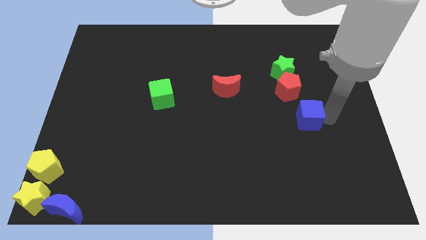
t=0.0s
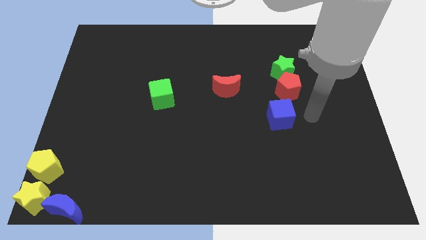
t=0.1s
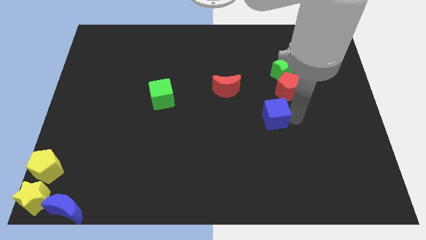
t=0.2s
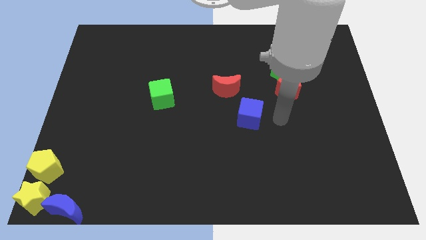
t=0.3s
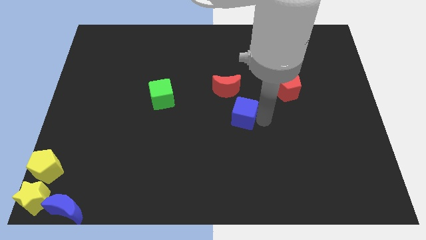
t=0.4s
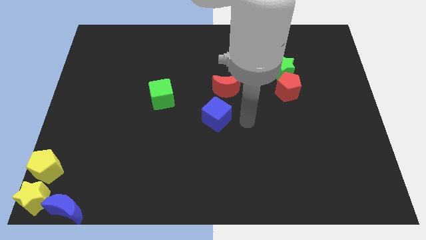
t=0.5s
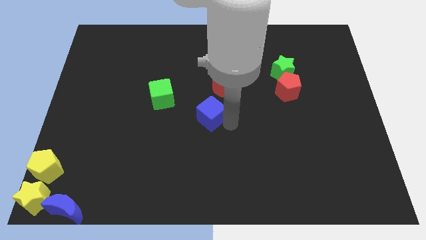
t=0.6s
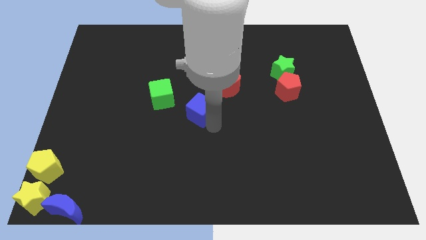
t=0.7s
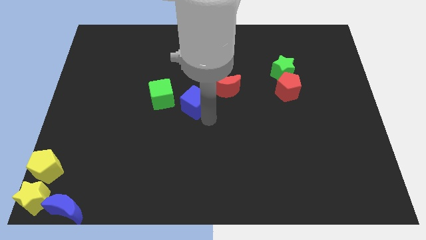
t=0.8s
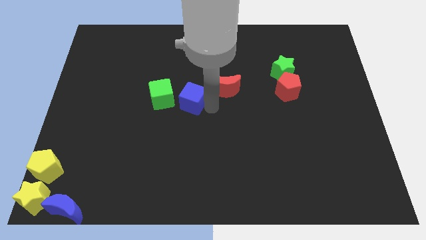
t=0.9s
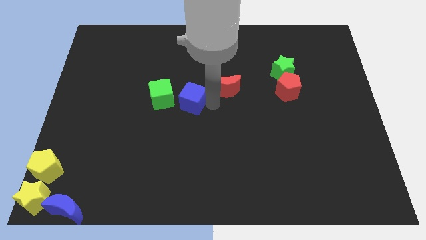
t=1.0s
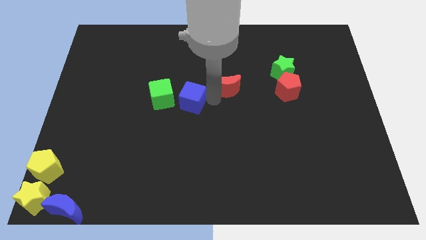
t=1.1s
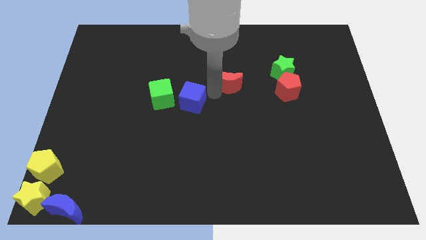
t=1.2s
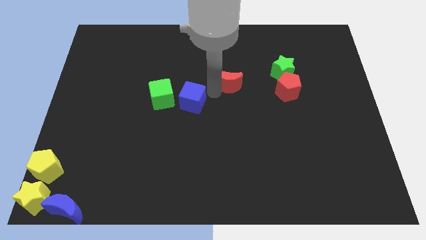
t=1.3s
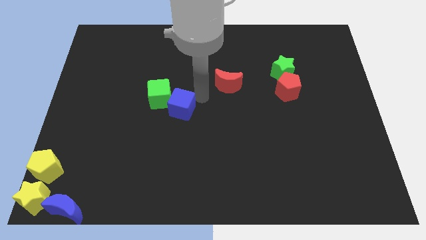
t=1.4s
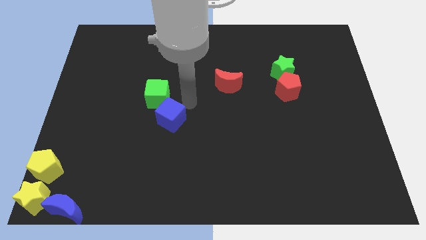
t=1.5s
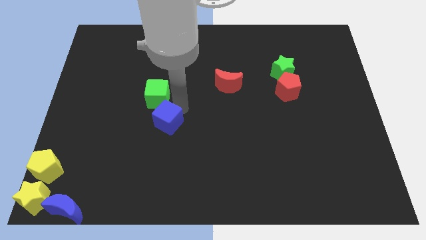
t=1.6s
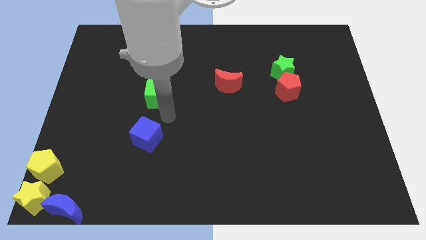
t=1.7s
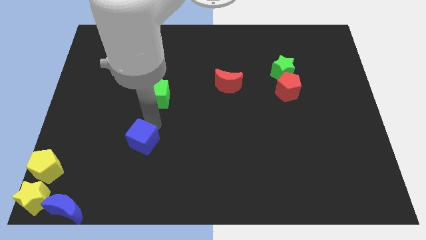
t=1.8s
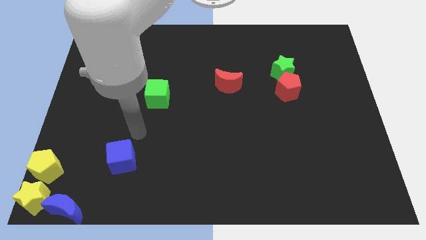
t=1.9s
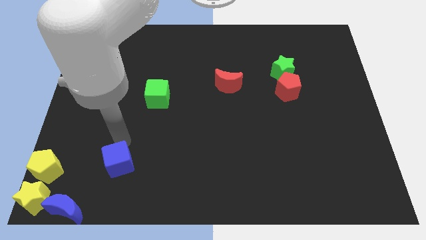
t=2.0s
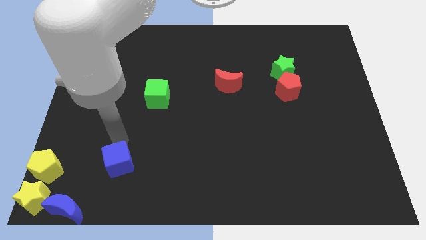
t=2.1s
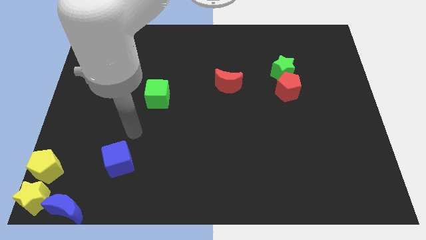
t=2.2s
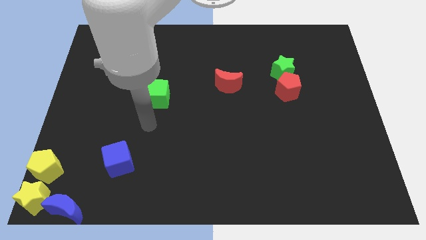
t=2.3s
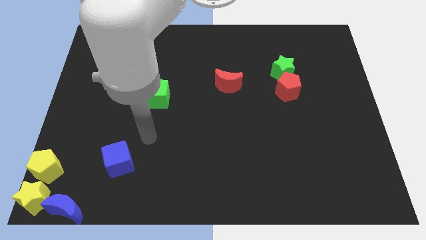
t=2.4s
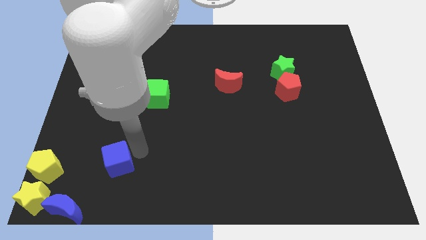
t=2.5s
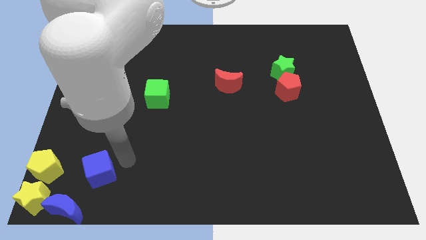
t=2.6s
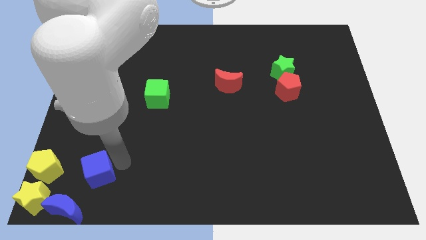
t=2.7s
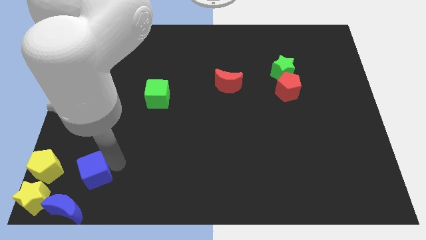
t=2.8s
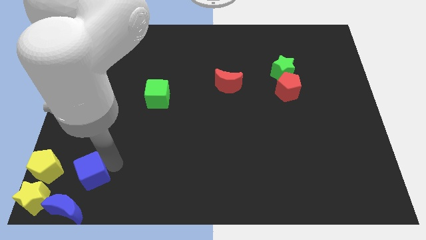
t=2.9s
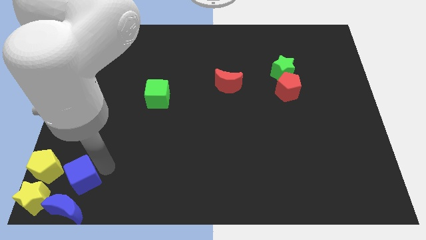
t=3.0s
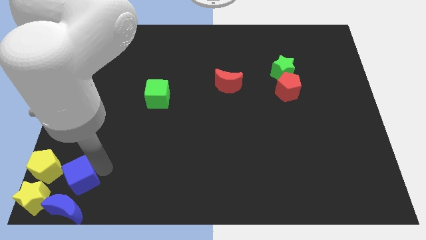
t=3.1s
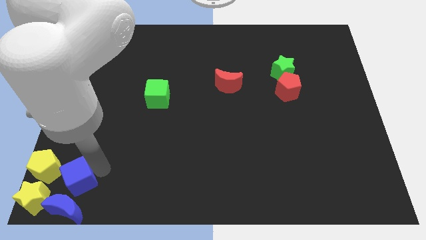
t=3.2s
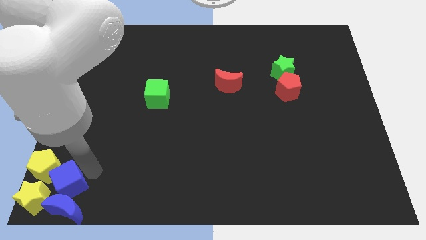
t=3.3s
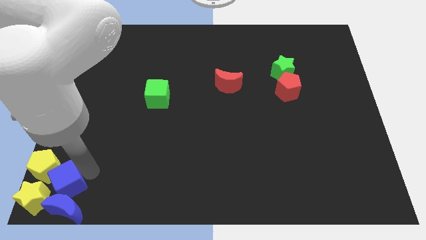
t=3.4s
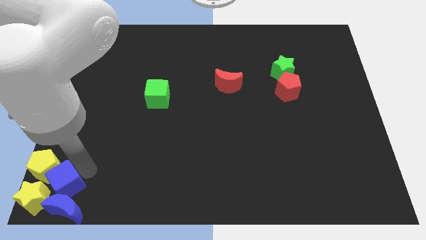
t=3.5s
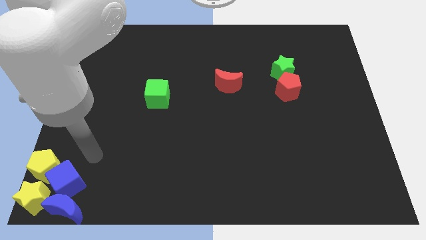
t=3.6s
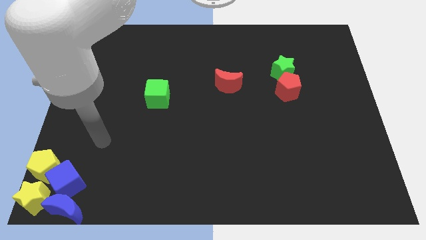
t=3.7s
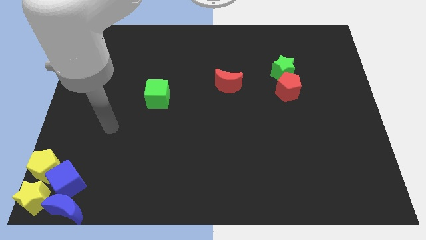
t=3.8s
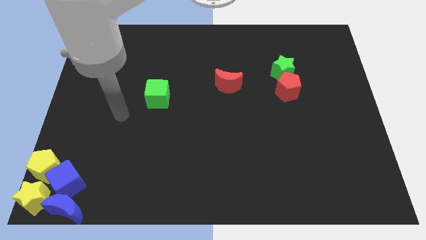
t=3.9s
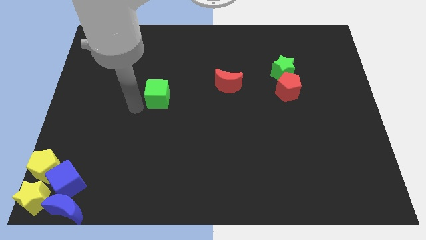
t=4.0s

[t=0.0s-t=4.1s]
move the blue cube into the group of bottom left side of the blocks

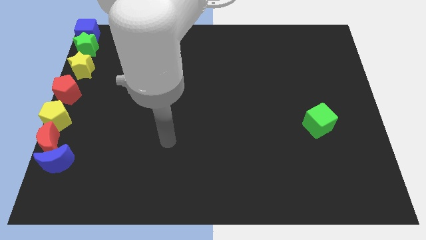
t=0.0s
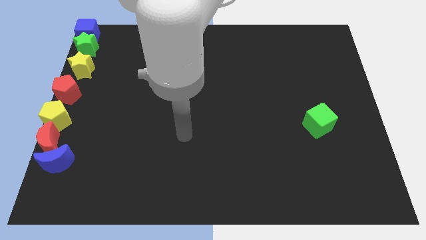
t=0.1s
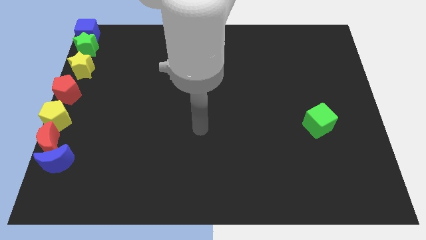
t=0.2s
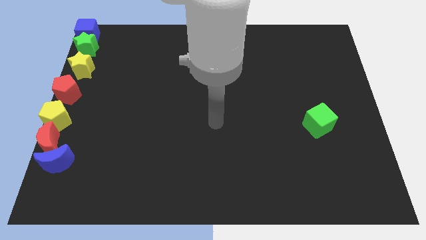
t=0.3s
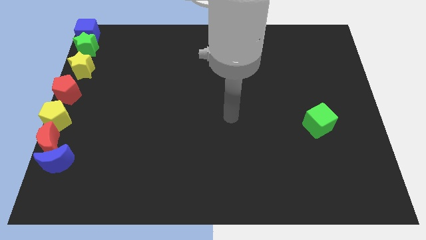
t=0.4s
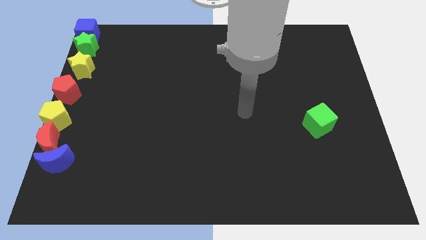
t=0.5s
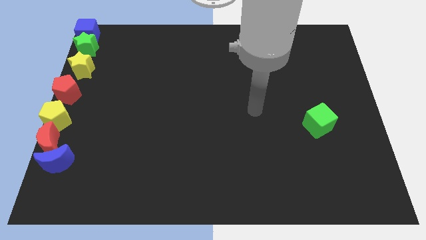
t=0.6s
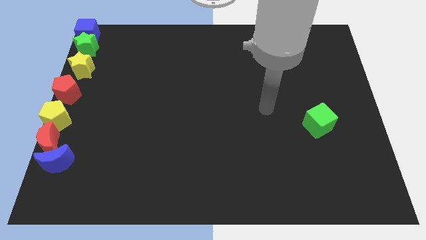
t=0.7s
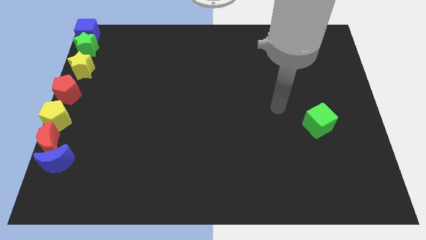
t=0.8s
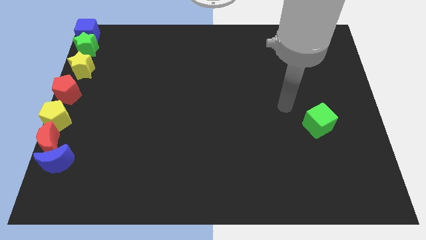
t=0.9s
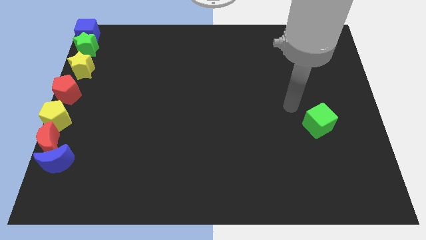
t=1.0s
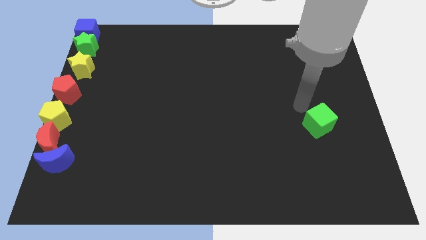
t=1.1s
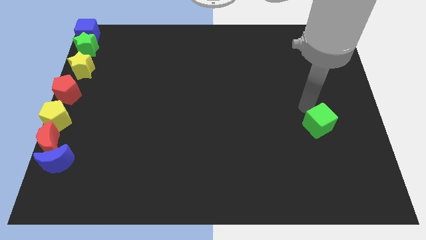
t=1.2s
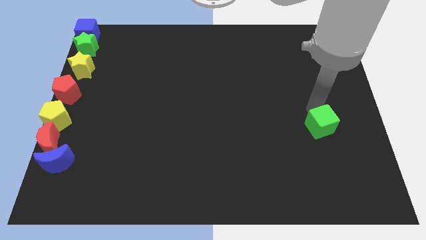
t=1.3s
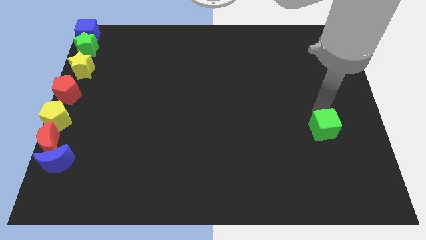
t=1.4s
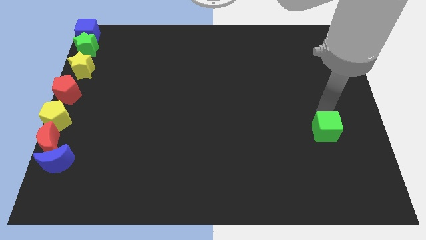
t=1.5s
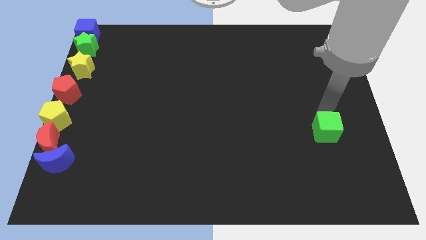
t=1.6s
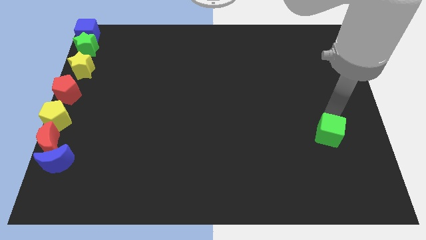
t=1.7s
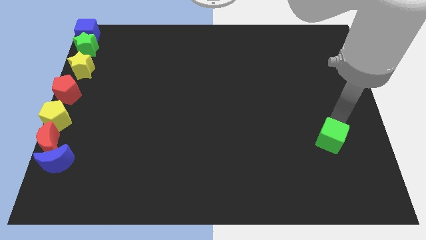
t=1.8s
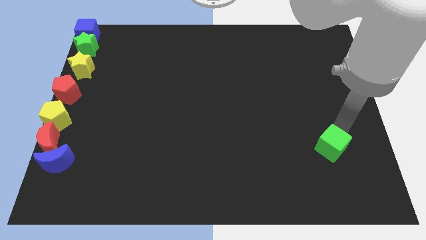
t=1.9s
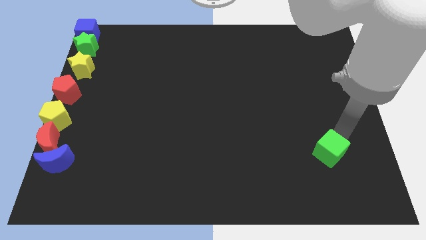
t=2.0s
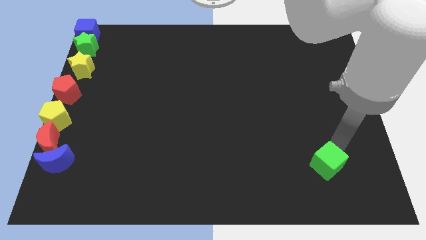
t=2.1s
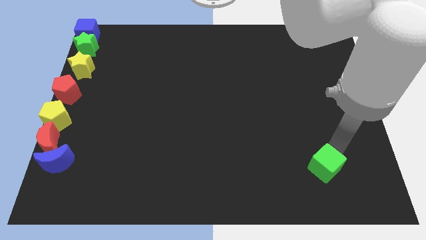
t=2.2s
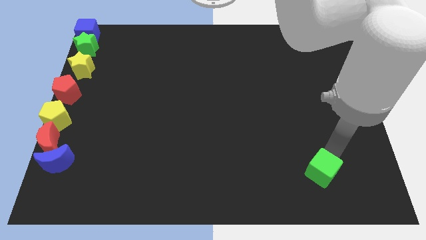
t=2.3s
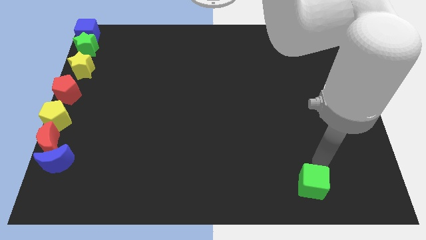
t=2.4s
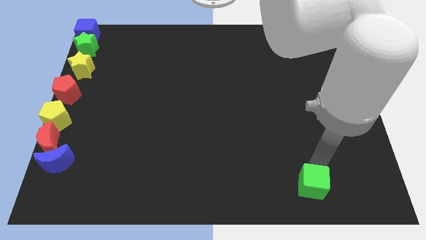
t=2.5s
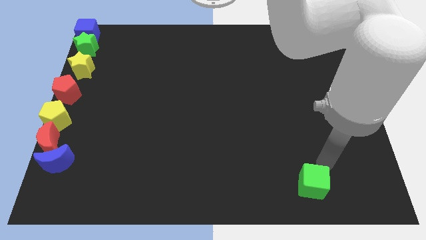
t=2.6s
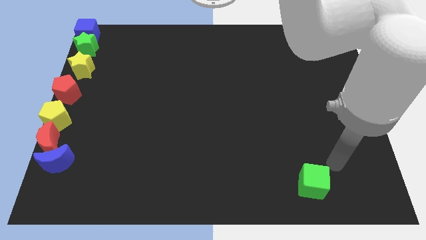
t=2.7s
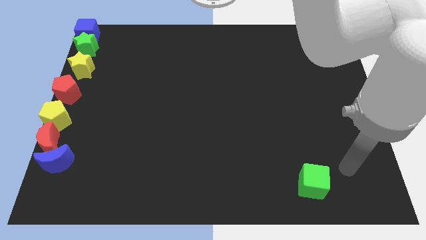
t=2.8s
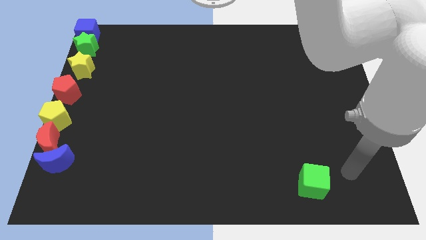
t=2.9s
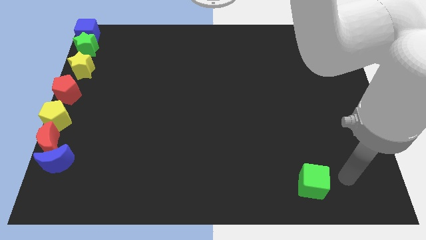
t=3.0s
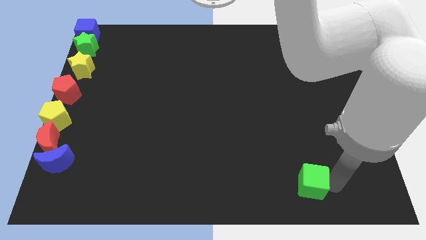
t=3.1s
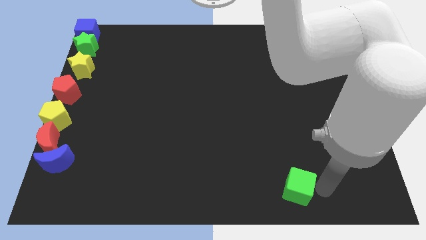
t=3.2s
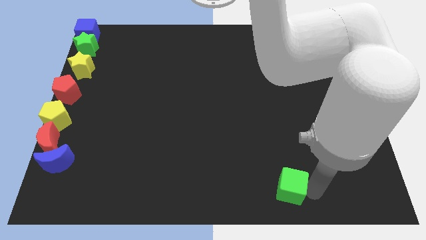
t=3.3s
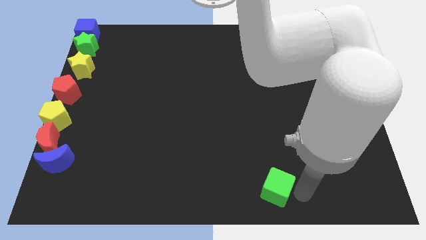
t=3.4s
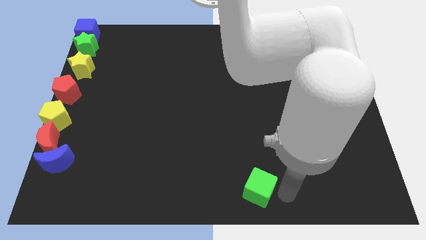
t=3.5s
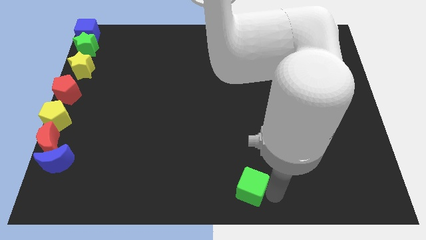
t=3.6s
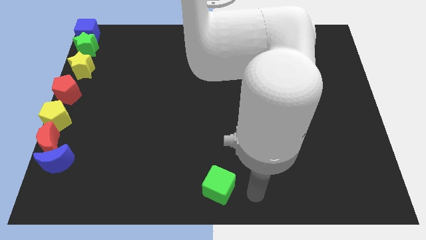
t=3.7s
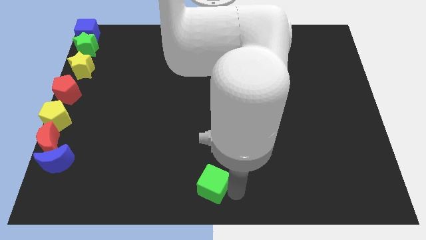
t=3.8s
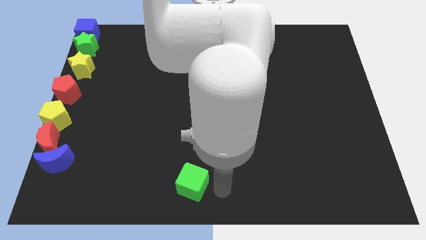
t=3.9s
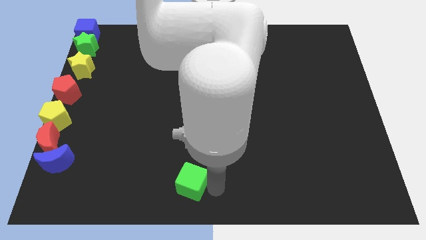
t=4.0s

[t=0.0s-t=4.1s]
push the green cube to the bottom center

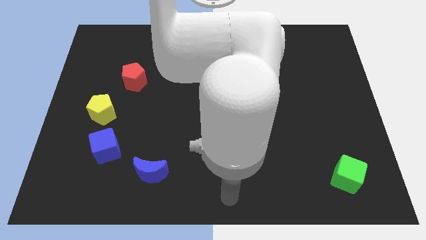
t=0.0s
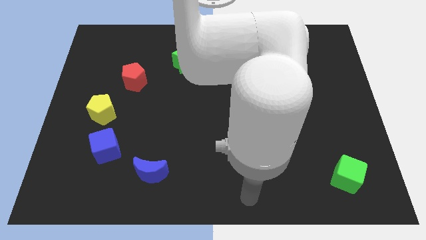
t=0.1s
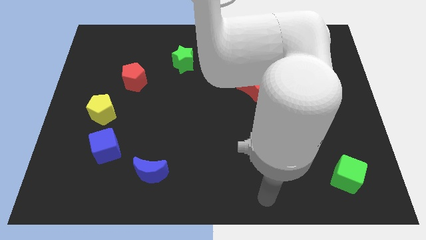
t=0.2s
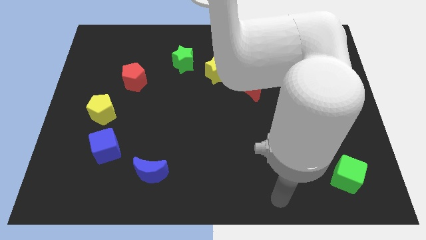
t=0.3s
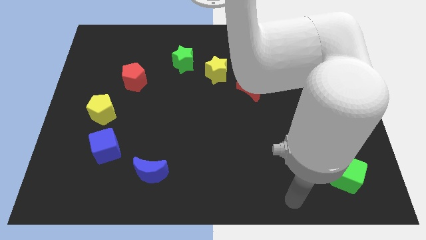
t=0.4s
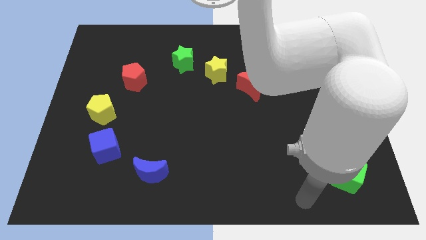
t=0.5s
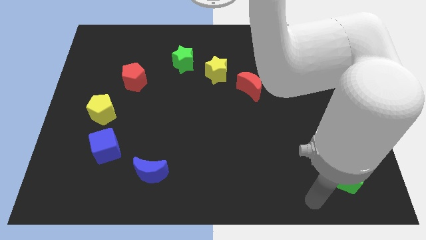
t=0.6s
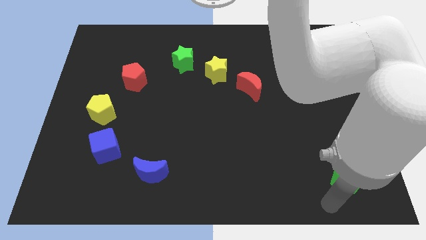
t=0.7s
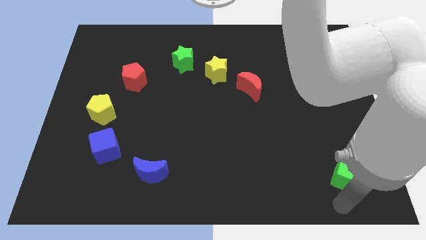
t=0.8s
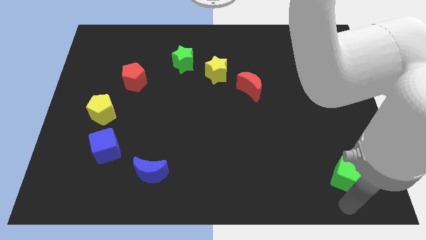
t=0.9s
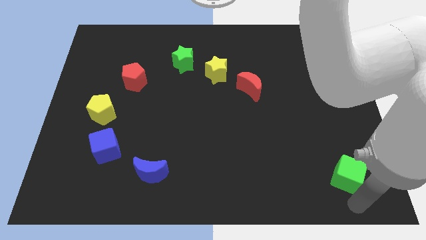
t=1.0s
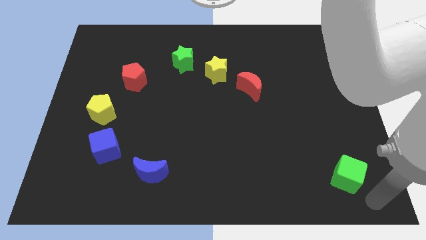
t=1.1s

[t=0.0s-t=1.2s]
place your hand under the green cube
